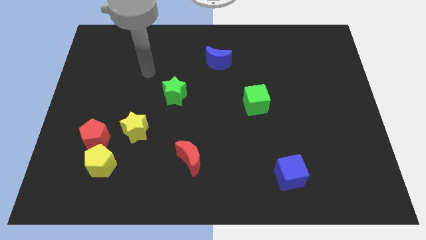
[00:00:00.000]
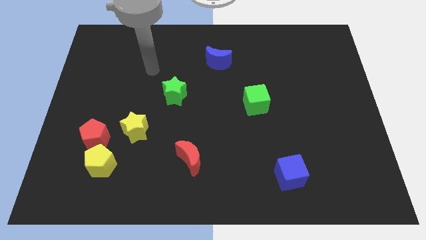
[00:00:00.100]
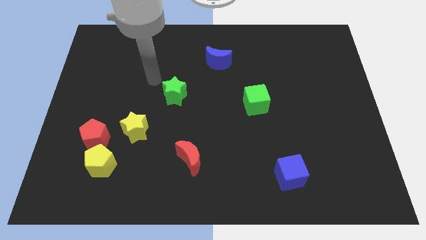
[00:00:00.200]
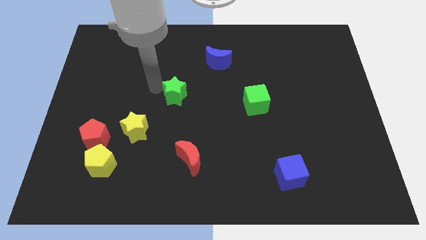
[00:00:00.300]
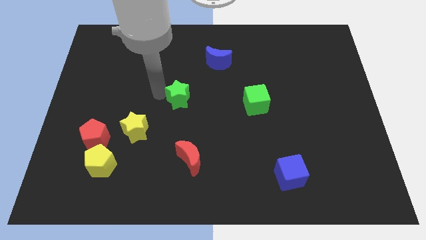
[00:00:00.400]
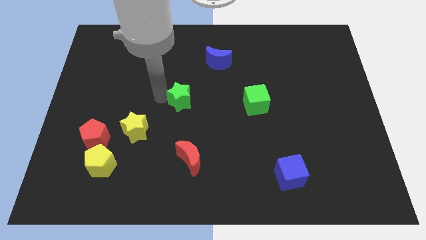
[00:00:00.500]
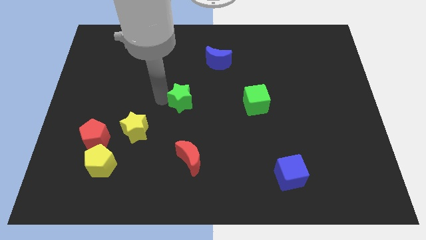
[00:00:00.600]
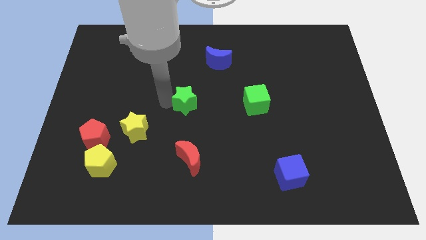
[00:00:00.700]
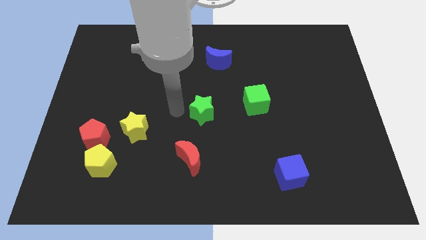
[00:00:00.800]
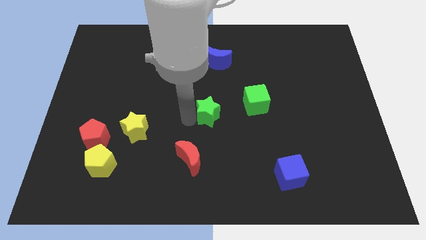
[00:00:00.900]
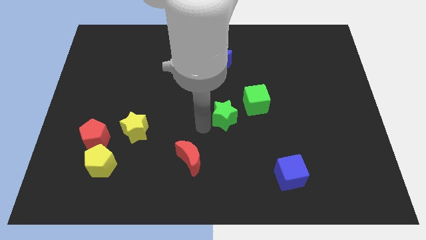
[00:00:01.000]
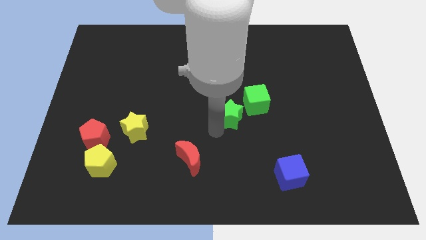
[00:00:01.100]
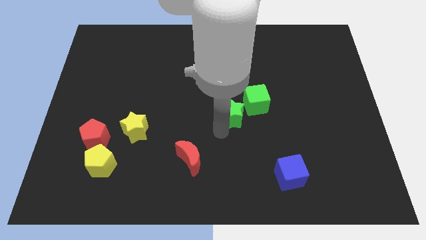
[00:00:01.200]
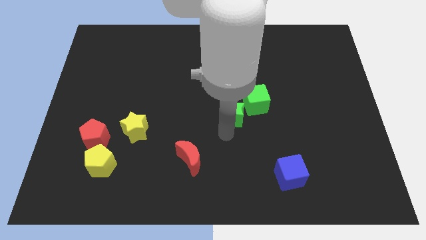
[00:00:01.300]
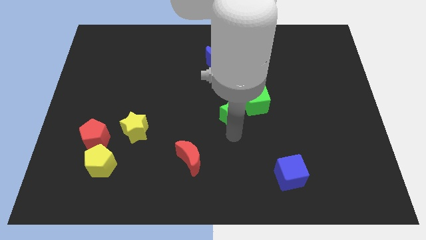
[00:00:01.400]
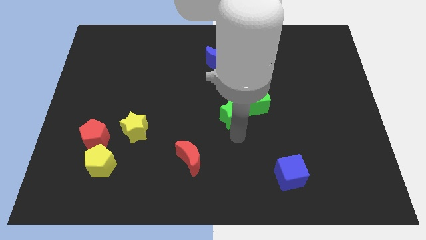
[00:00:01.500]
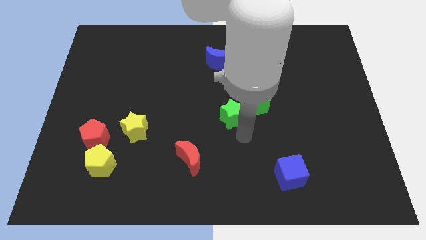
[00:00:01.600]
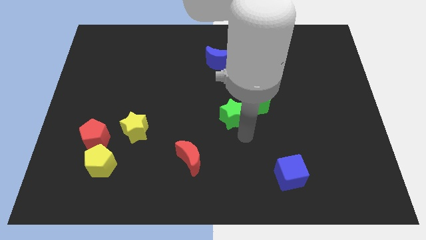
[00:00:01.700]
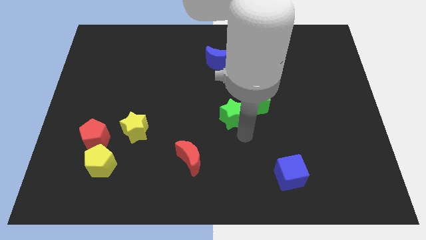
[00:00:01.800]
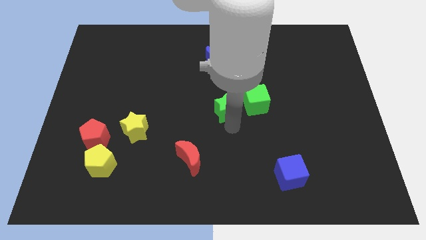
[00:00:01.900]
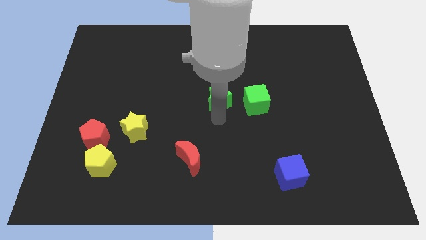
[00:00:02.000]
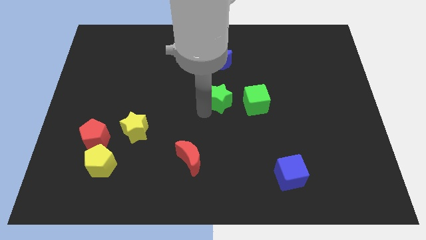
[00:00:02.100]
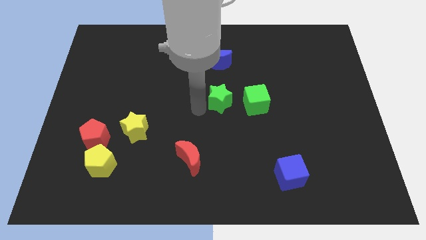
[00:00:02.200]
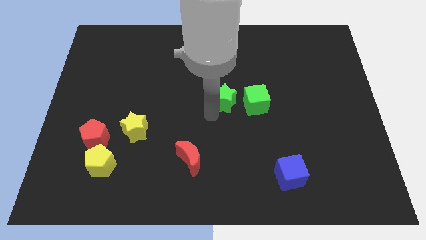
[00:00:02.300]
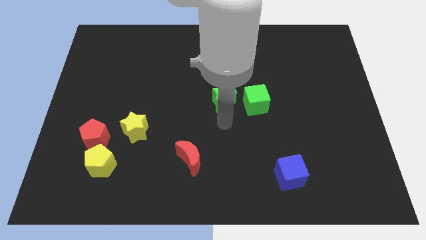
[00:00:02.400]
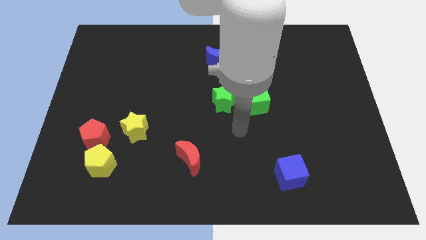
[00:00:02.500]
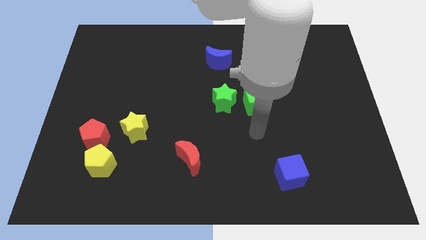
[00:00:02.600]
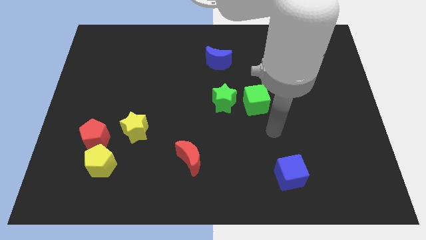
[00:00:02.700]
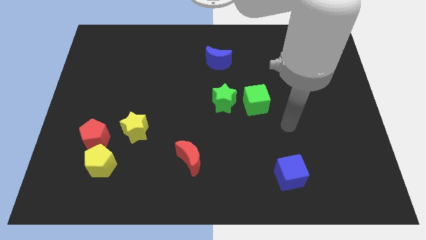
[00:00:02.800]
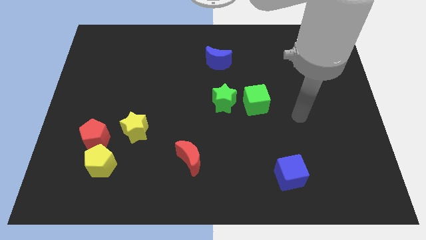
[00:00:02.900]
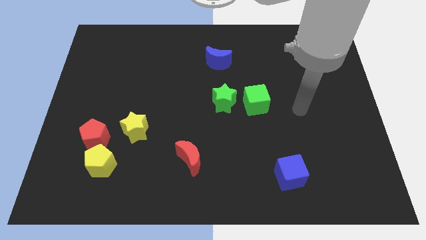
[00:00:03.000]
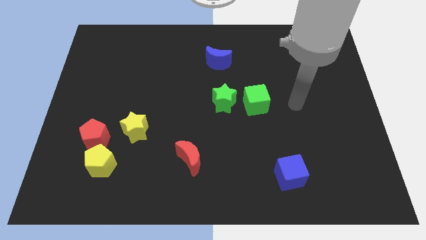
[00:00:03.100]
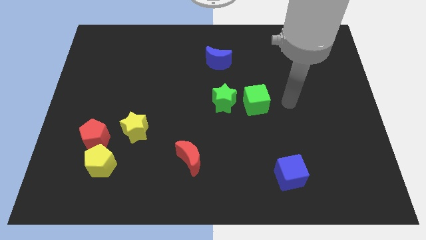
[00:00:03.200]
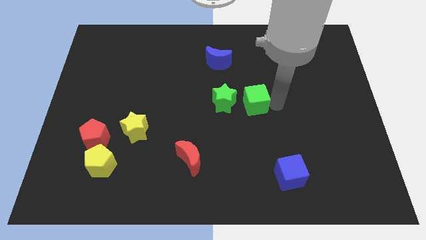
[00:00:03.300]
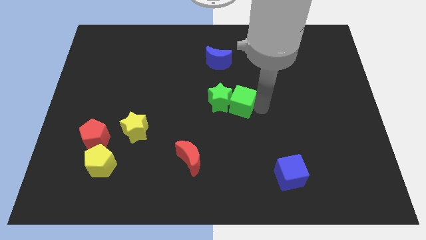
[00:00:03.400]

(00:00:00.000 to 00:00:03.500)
push the green cube into the green star

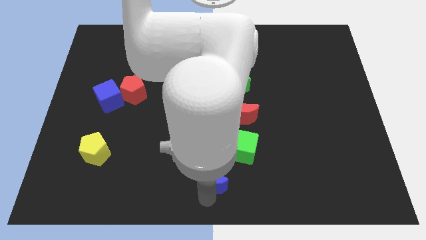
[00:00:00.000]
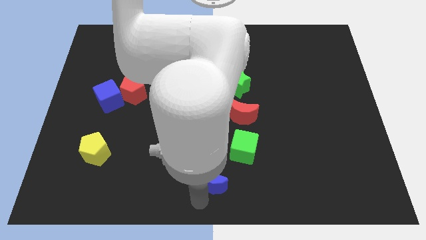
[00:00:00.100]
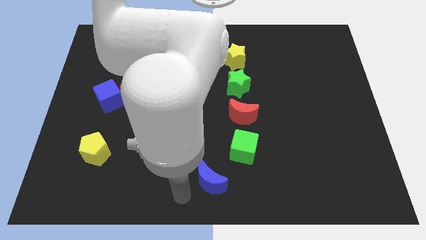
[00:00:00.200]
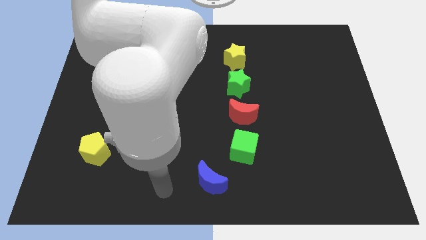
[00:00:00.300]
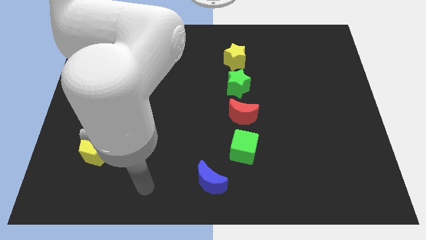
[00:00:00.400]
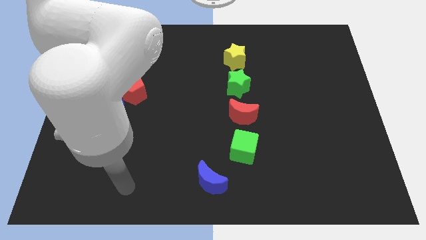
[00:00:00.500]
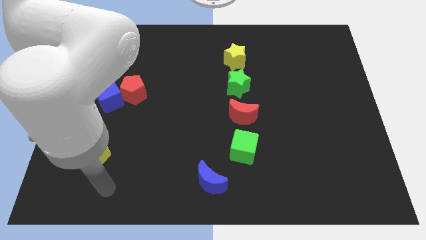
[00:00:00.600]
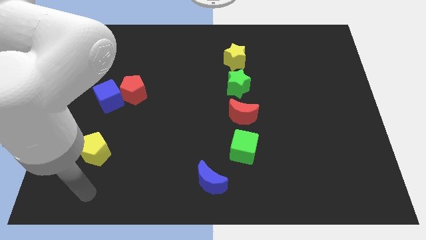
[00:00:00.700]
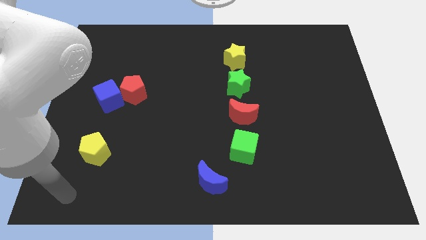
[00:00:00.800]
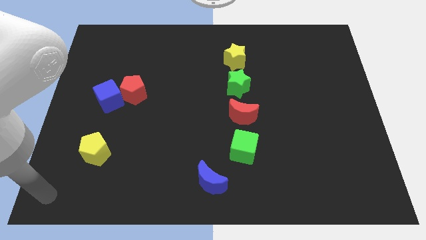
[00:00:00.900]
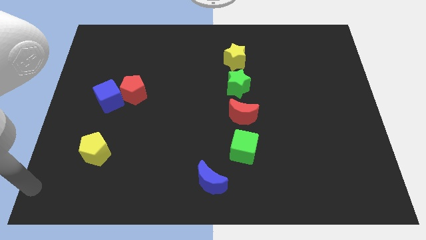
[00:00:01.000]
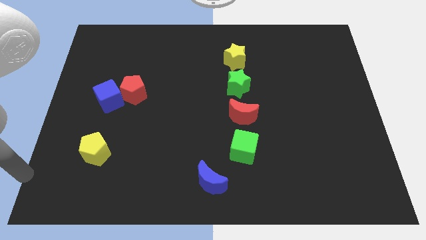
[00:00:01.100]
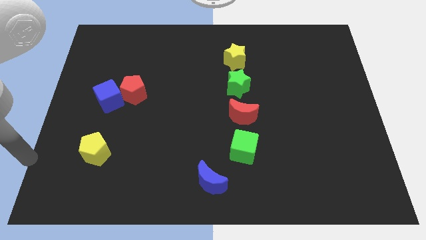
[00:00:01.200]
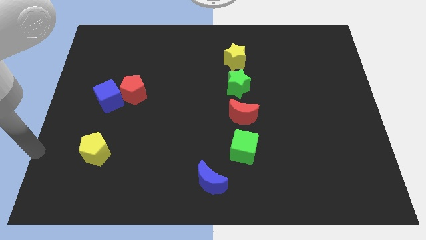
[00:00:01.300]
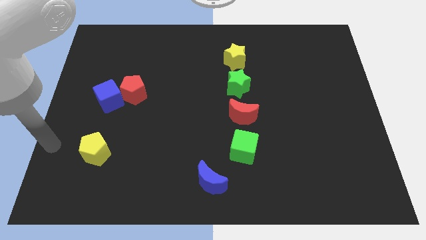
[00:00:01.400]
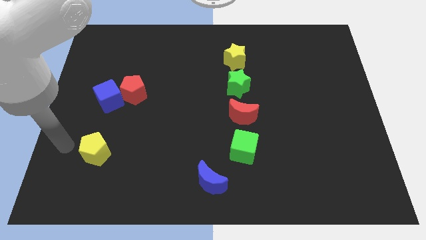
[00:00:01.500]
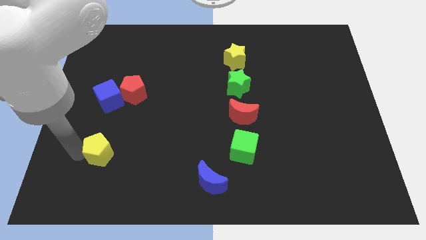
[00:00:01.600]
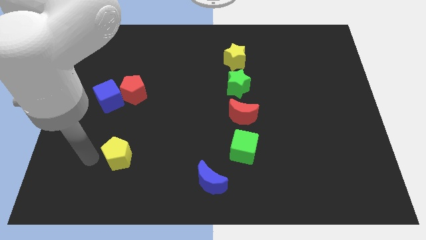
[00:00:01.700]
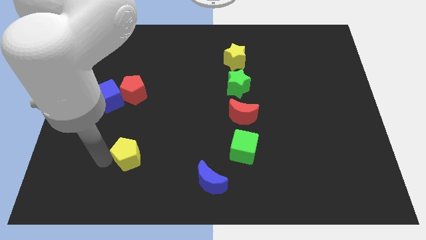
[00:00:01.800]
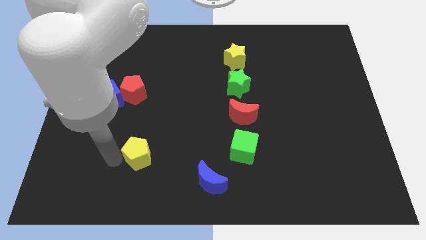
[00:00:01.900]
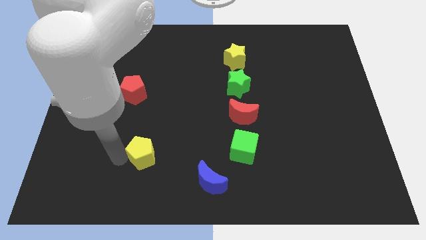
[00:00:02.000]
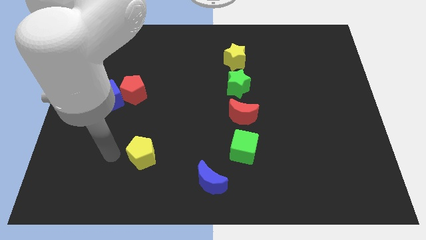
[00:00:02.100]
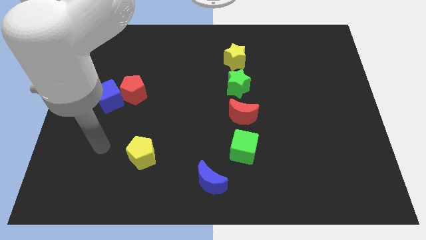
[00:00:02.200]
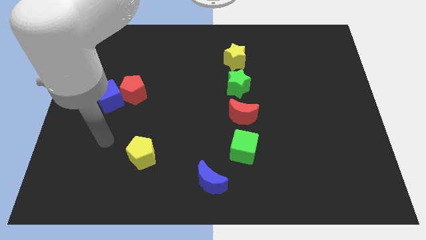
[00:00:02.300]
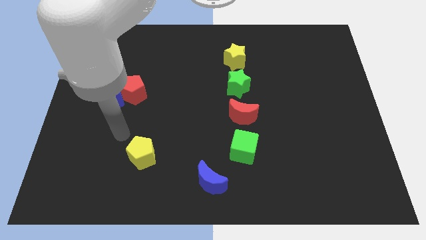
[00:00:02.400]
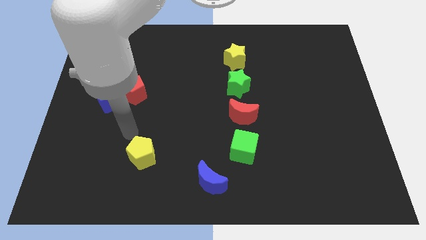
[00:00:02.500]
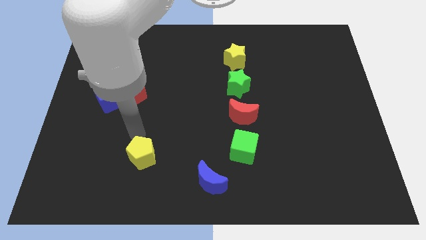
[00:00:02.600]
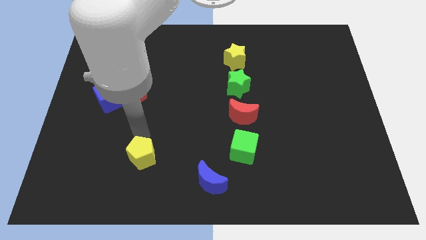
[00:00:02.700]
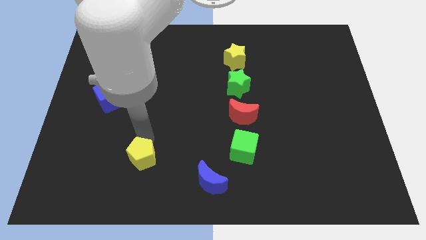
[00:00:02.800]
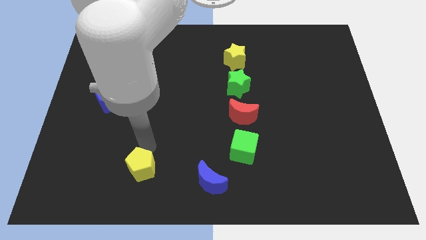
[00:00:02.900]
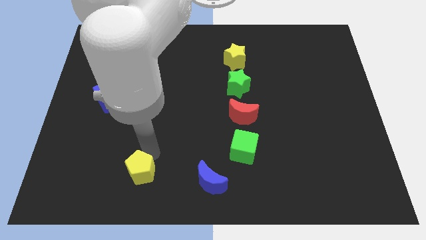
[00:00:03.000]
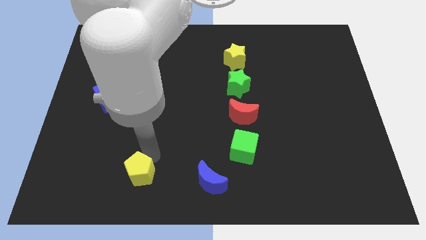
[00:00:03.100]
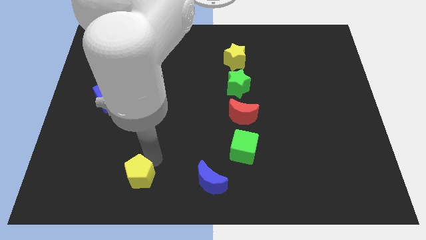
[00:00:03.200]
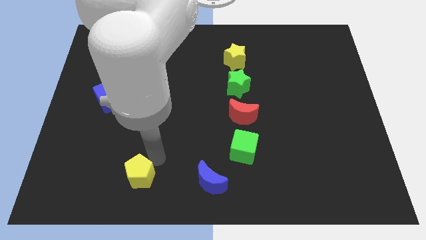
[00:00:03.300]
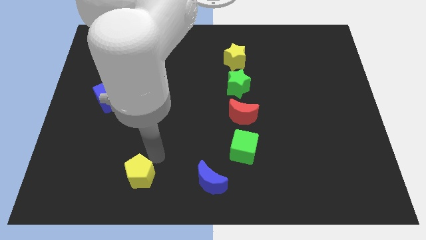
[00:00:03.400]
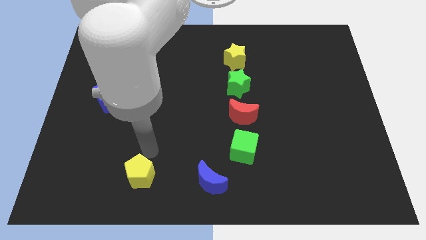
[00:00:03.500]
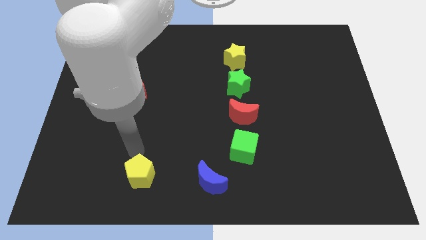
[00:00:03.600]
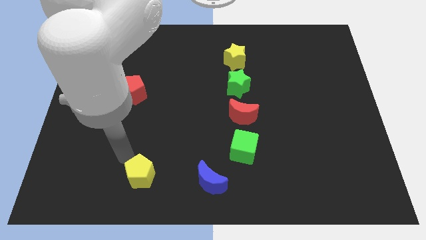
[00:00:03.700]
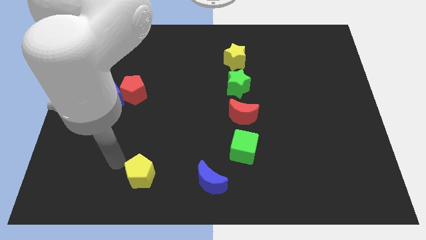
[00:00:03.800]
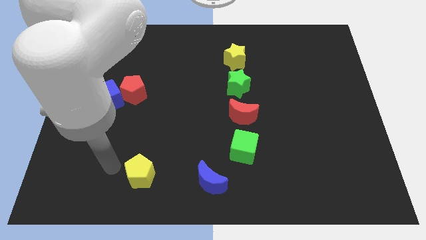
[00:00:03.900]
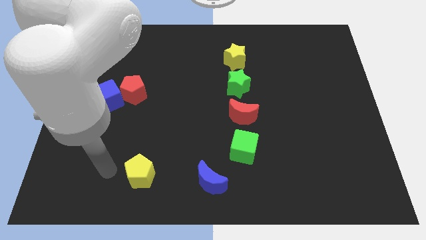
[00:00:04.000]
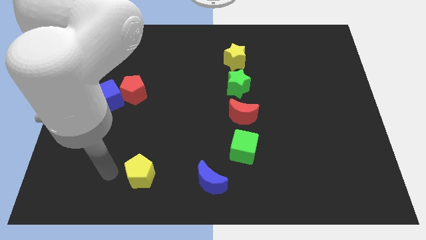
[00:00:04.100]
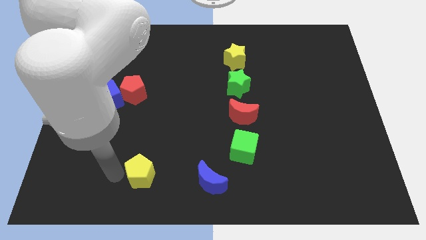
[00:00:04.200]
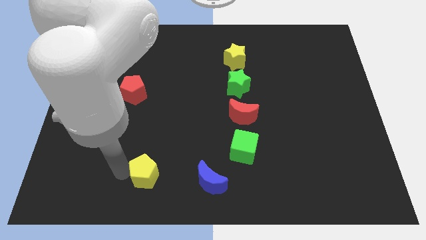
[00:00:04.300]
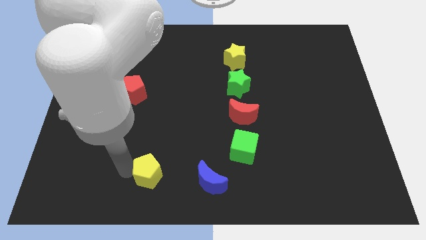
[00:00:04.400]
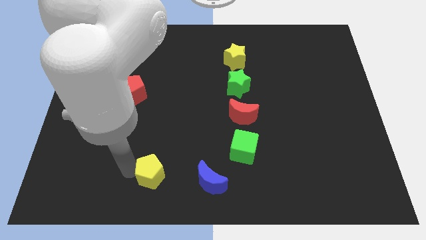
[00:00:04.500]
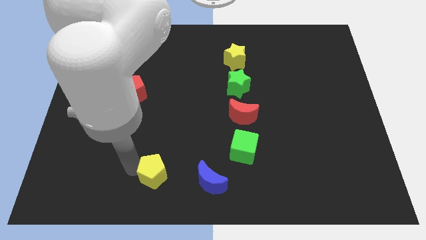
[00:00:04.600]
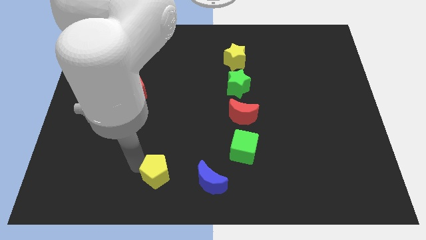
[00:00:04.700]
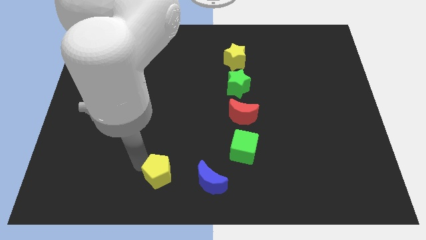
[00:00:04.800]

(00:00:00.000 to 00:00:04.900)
move your arm away from the blue moon

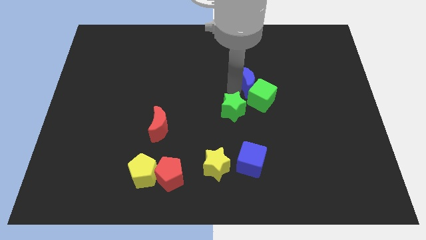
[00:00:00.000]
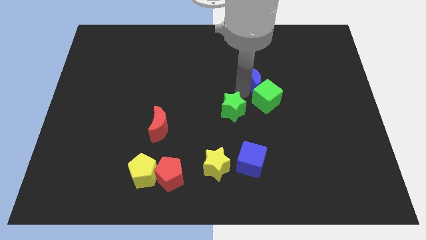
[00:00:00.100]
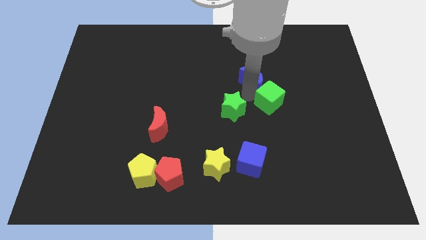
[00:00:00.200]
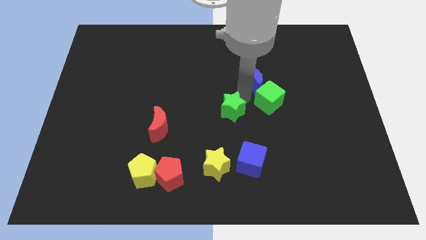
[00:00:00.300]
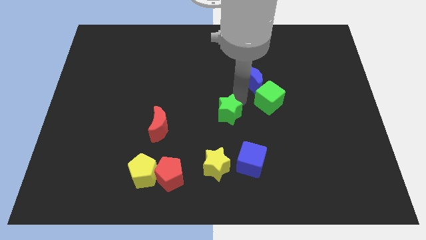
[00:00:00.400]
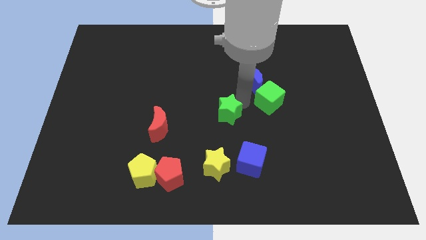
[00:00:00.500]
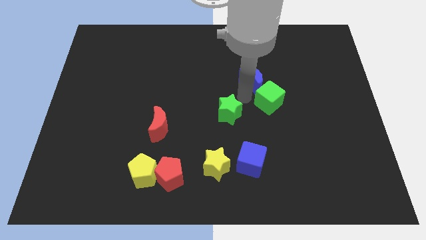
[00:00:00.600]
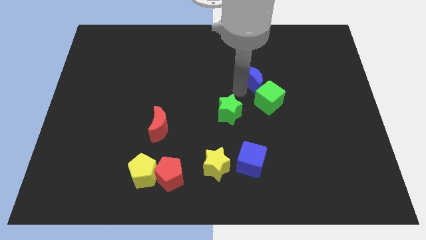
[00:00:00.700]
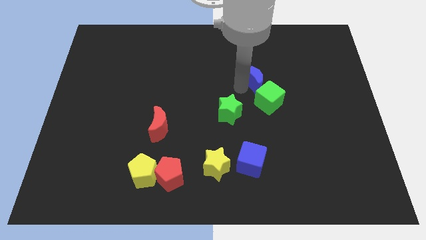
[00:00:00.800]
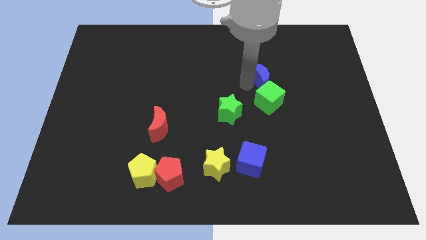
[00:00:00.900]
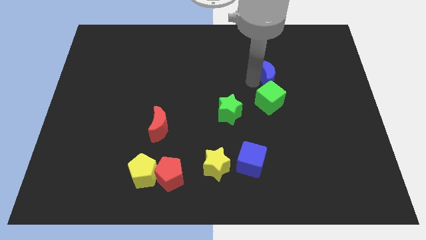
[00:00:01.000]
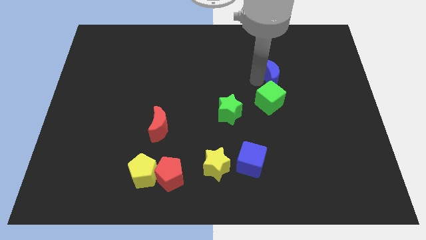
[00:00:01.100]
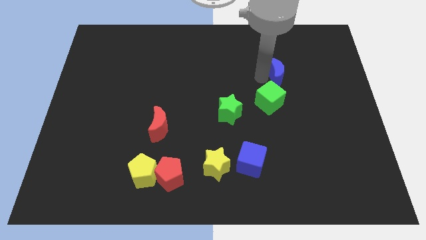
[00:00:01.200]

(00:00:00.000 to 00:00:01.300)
push blue moon above green cube
